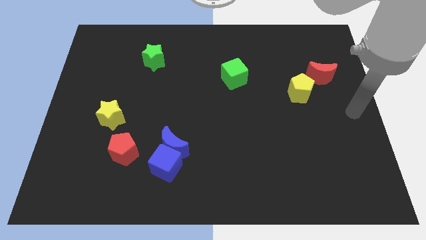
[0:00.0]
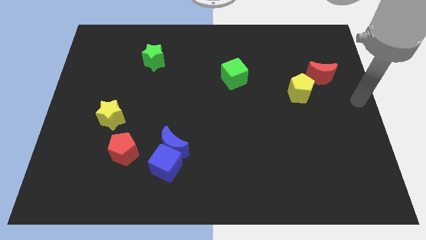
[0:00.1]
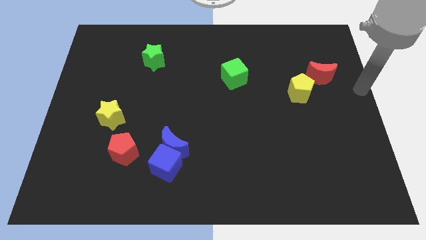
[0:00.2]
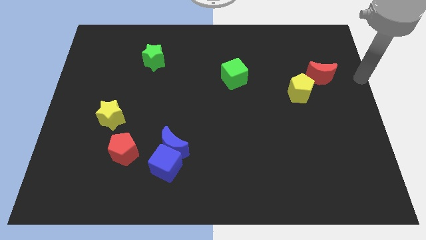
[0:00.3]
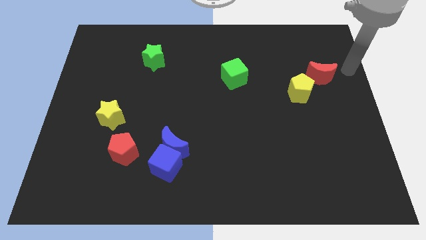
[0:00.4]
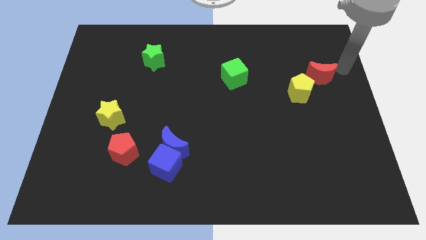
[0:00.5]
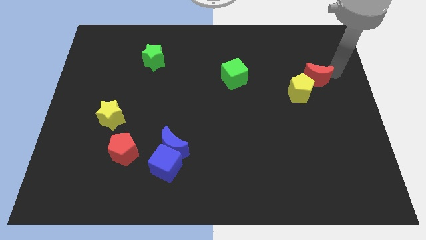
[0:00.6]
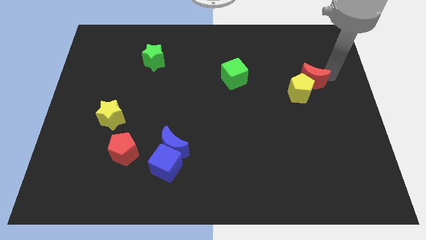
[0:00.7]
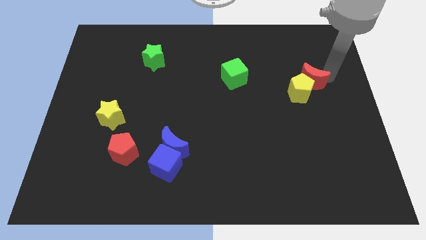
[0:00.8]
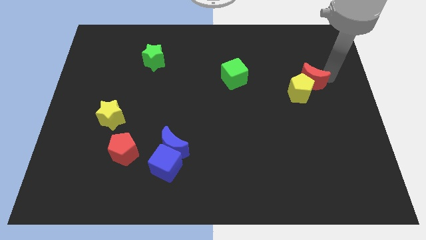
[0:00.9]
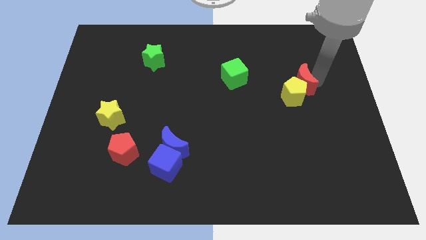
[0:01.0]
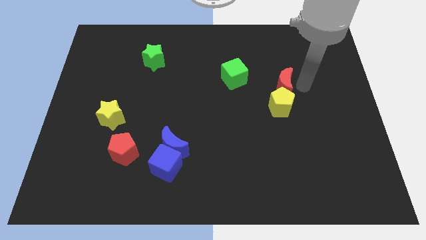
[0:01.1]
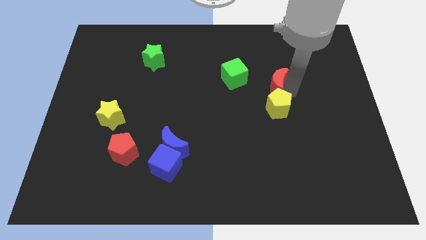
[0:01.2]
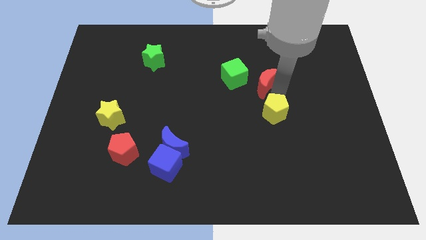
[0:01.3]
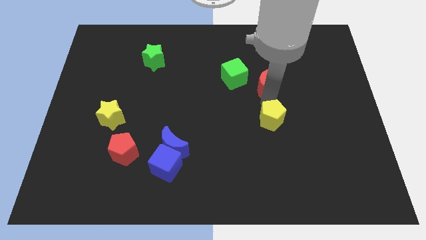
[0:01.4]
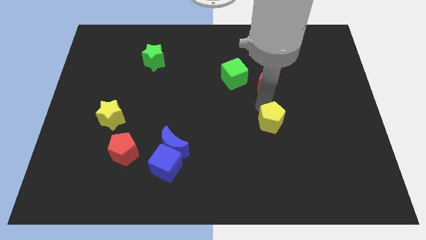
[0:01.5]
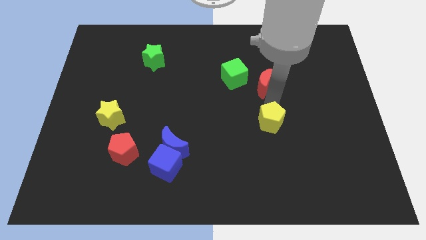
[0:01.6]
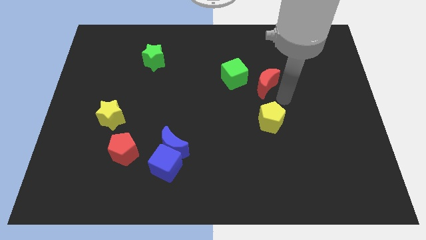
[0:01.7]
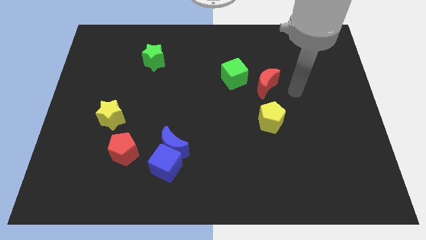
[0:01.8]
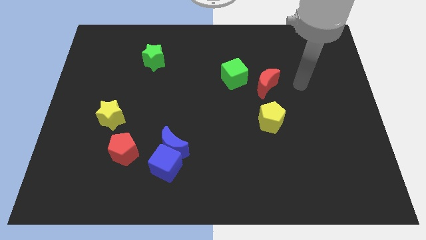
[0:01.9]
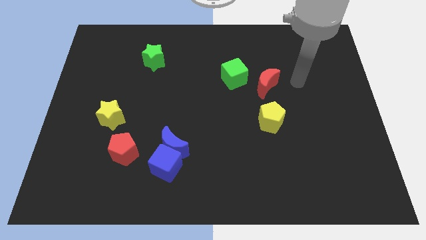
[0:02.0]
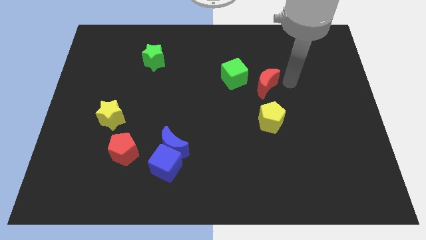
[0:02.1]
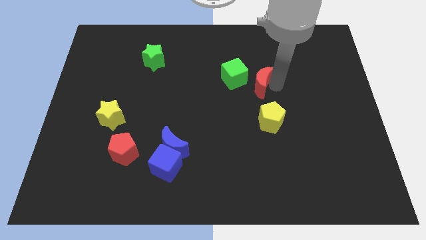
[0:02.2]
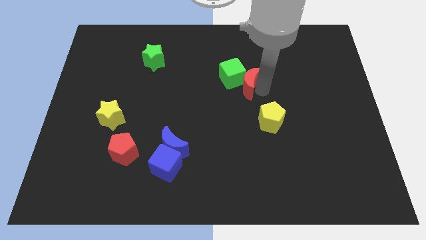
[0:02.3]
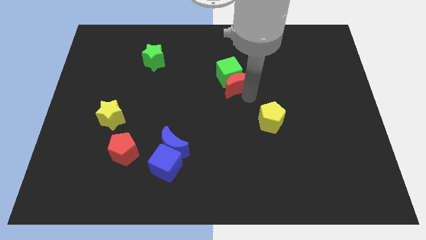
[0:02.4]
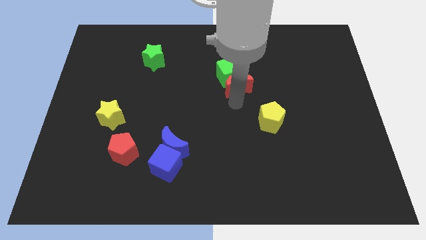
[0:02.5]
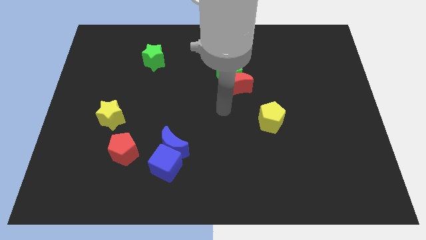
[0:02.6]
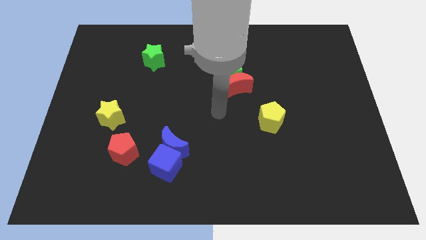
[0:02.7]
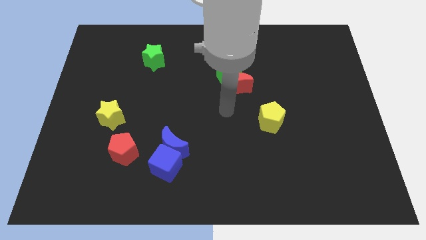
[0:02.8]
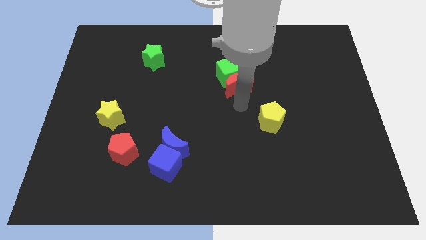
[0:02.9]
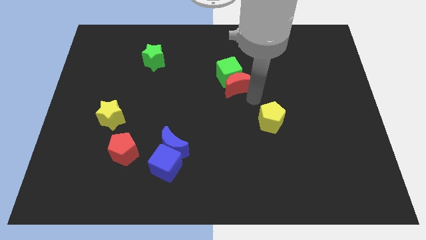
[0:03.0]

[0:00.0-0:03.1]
push the red moon into the green cube

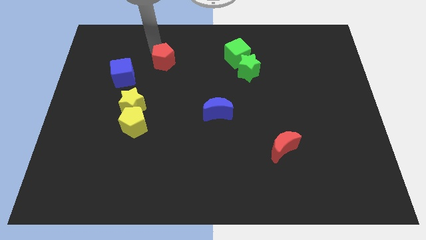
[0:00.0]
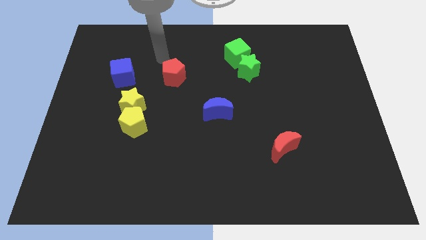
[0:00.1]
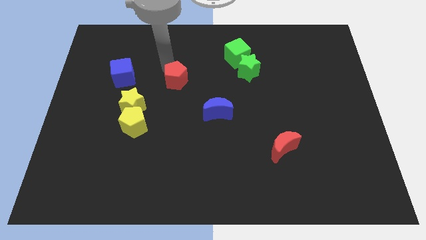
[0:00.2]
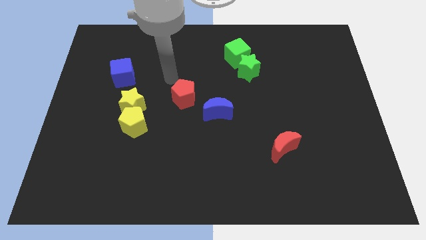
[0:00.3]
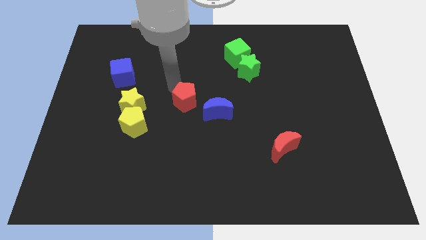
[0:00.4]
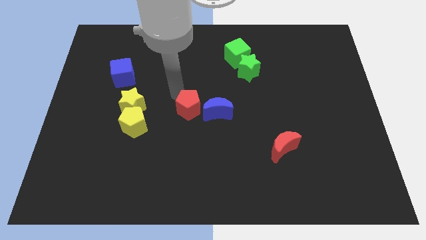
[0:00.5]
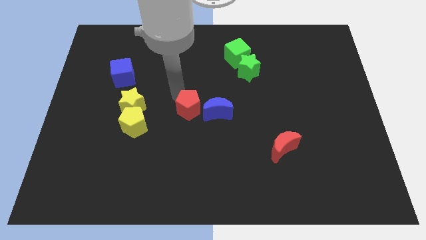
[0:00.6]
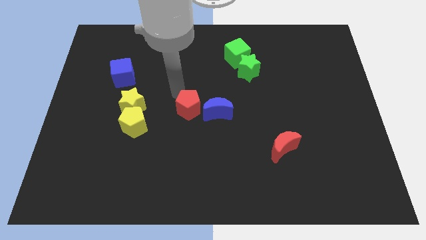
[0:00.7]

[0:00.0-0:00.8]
place the red pentagon to the left of the blue moon

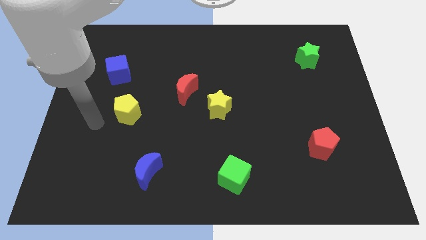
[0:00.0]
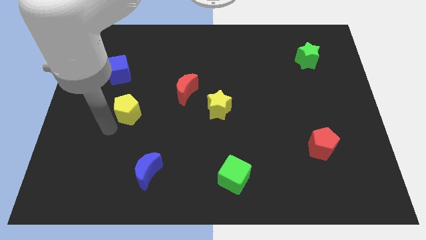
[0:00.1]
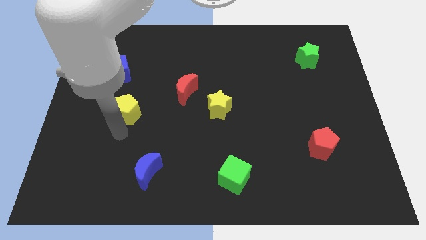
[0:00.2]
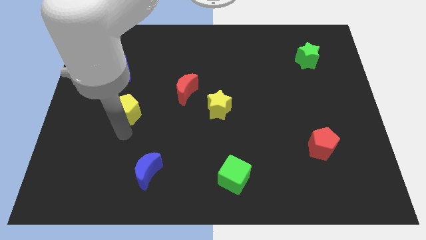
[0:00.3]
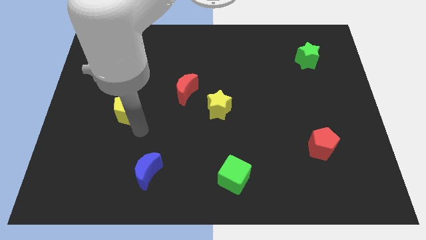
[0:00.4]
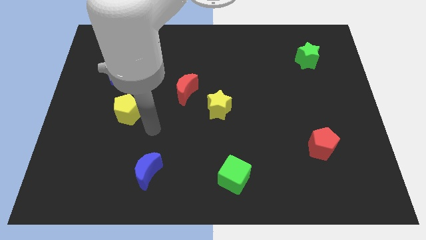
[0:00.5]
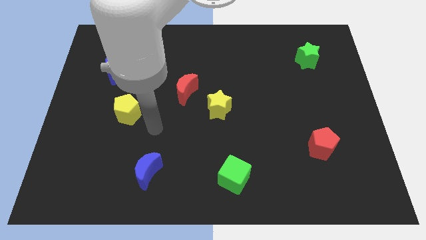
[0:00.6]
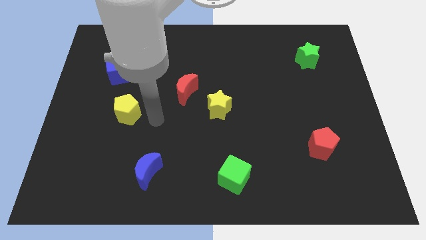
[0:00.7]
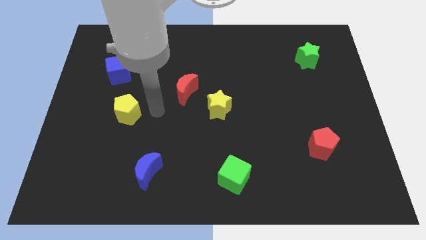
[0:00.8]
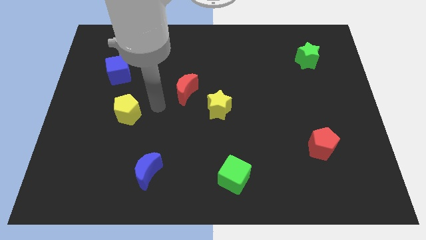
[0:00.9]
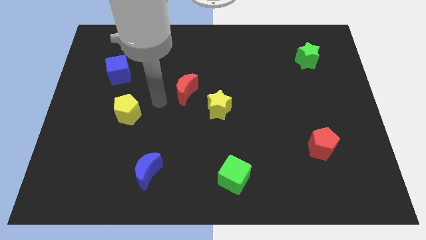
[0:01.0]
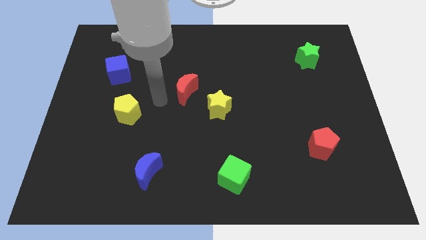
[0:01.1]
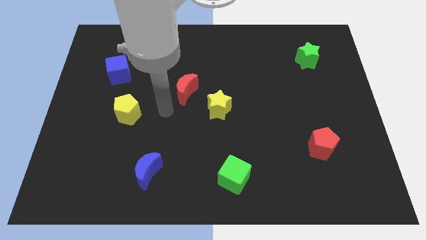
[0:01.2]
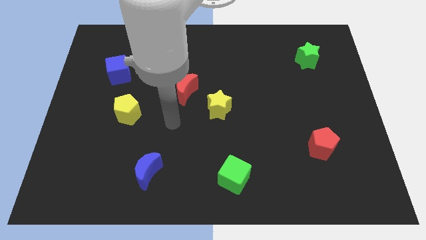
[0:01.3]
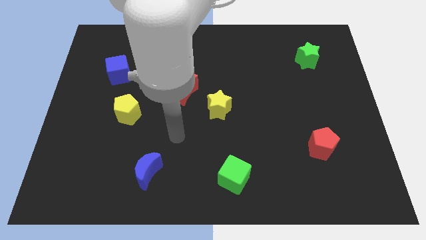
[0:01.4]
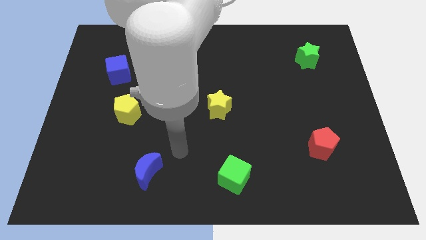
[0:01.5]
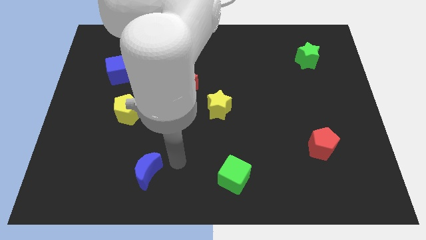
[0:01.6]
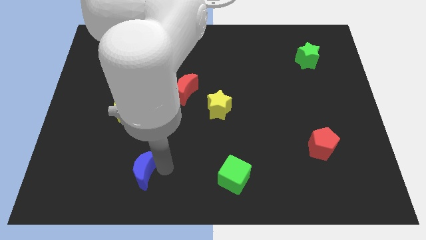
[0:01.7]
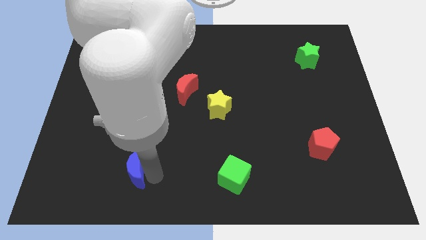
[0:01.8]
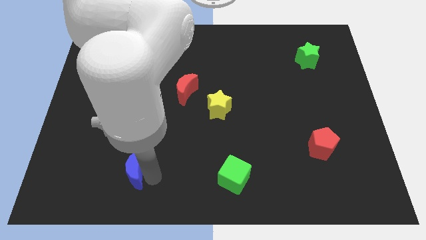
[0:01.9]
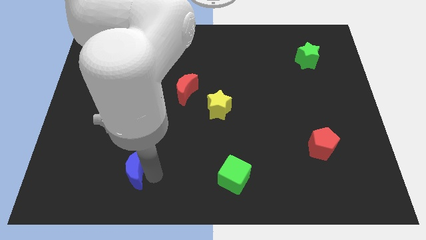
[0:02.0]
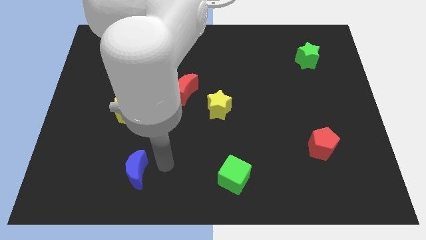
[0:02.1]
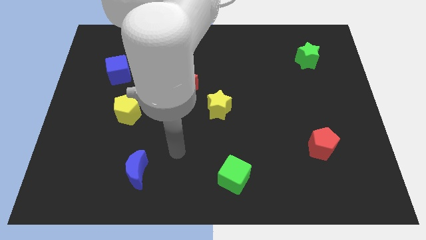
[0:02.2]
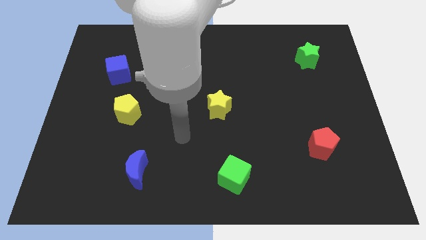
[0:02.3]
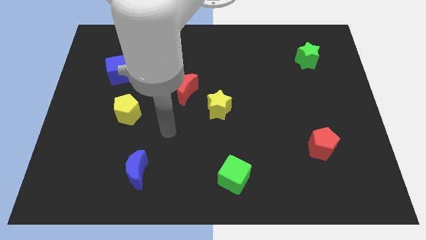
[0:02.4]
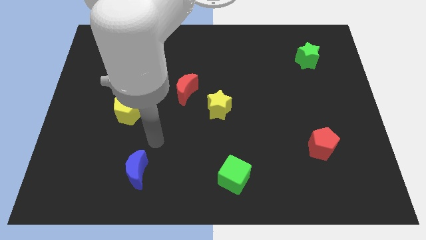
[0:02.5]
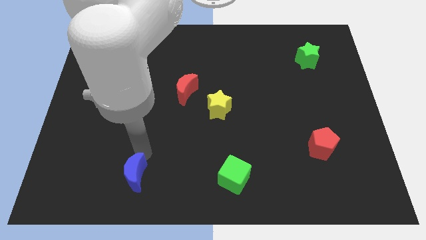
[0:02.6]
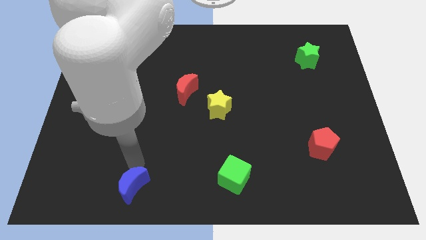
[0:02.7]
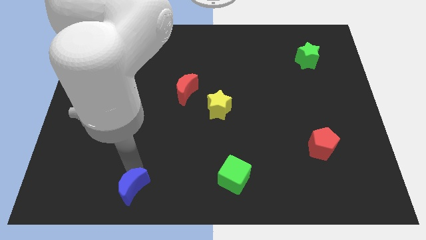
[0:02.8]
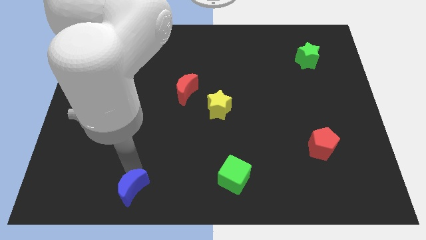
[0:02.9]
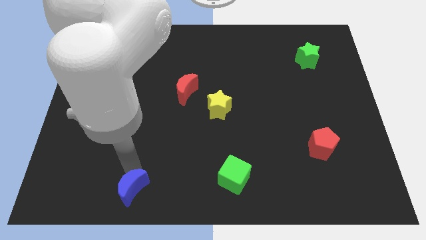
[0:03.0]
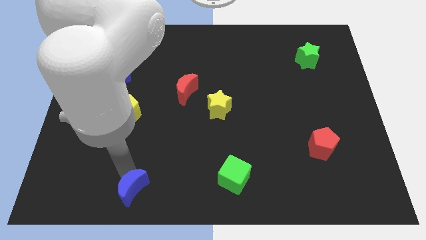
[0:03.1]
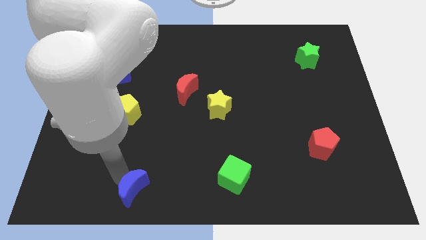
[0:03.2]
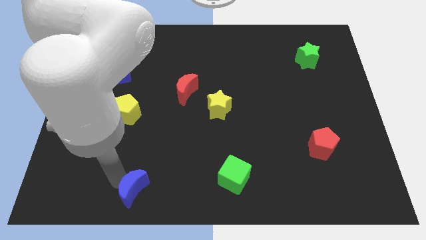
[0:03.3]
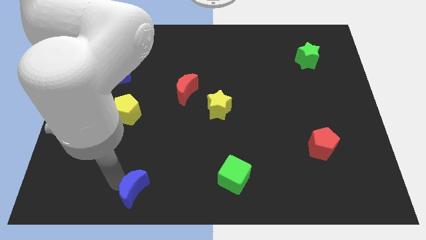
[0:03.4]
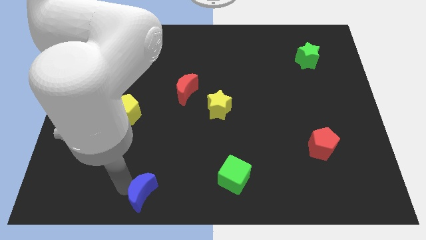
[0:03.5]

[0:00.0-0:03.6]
push the blue crescent towards the bottom

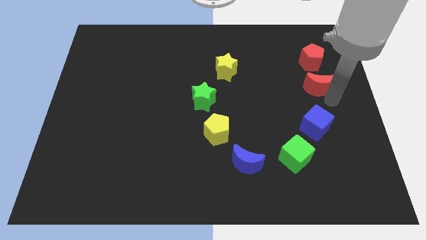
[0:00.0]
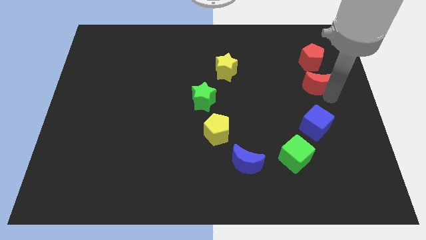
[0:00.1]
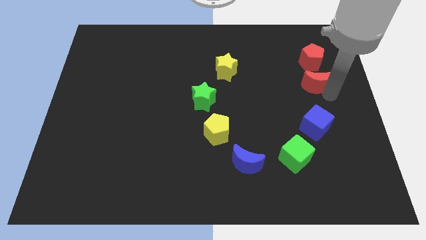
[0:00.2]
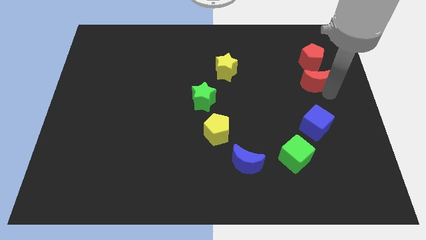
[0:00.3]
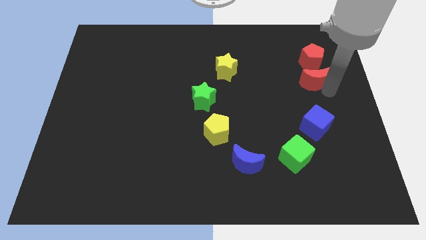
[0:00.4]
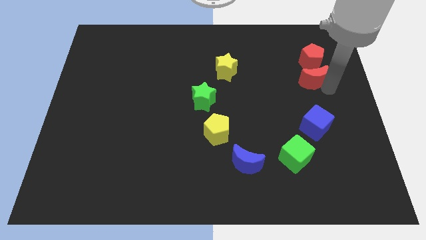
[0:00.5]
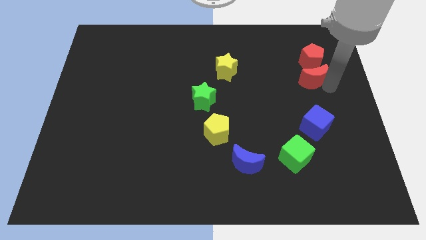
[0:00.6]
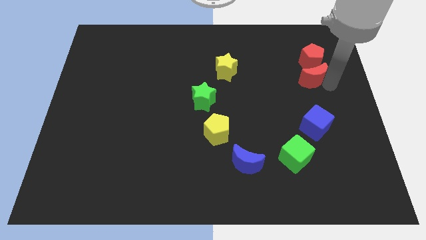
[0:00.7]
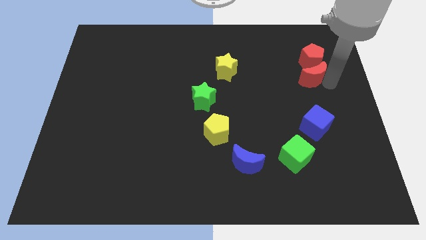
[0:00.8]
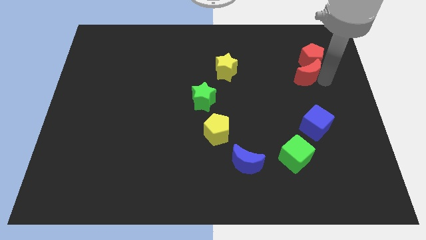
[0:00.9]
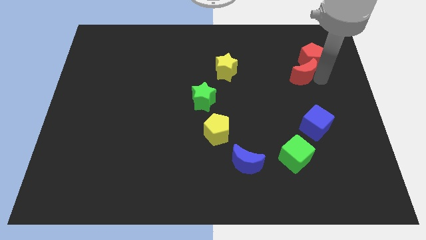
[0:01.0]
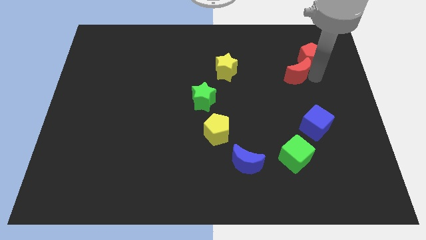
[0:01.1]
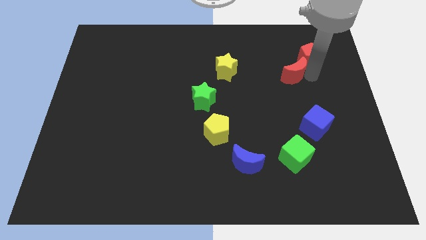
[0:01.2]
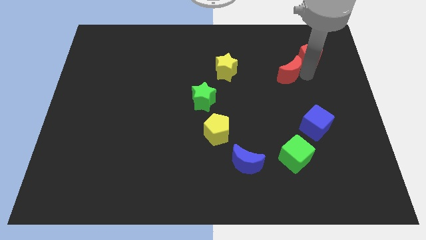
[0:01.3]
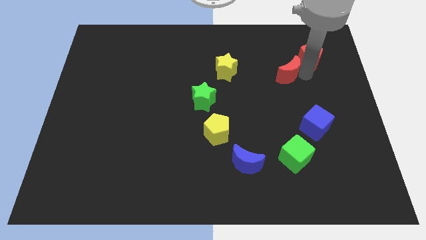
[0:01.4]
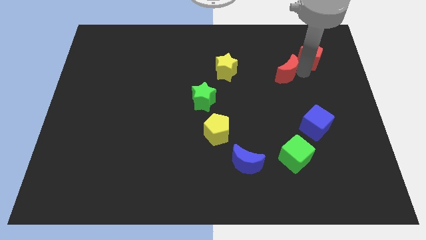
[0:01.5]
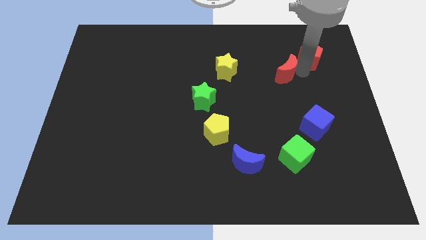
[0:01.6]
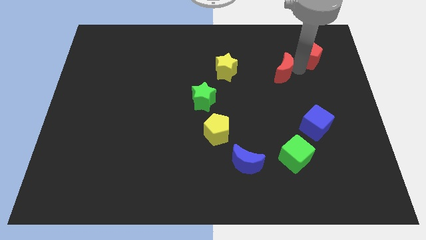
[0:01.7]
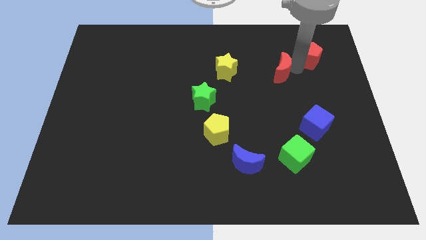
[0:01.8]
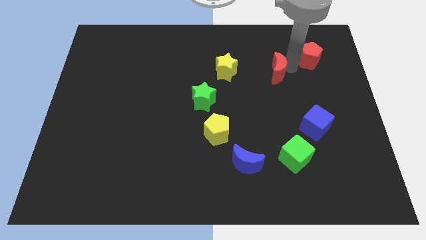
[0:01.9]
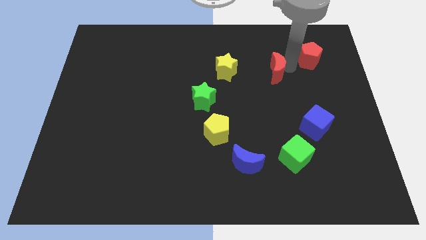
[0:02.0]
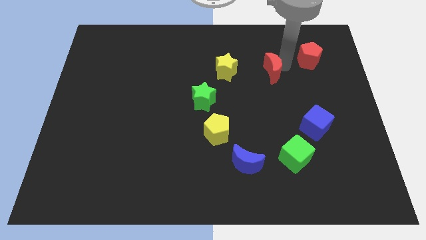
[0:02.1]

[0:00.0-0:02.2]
push the red moon to the right of the yellow star
